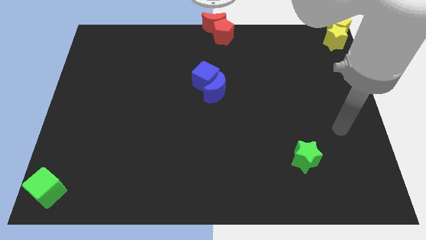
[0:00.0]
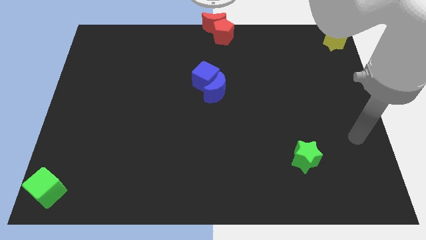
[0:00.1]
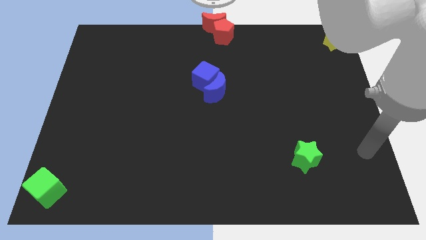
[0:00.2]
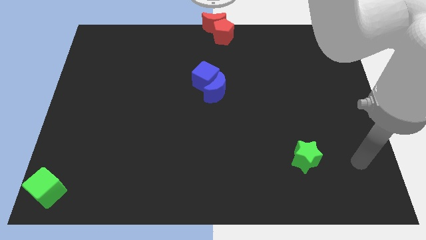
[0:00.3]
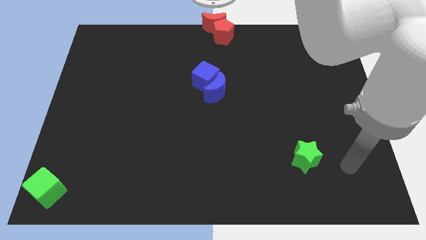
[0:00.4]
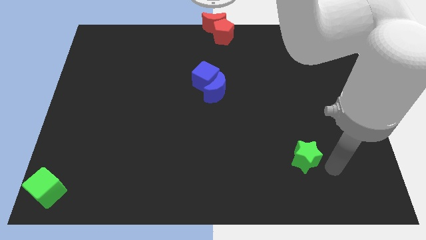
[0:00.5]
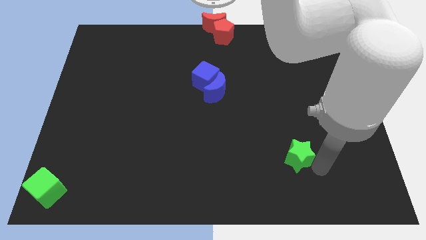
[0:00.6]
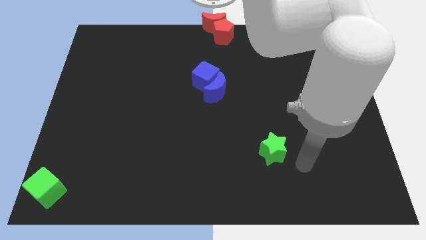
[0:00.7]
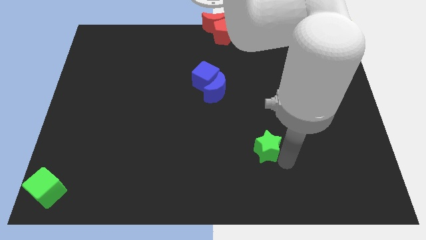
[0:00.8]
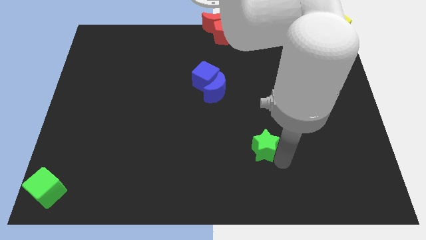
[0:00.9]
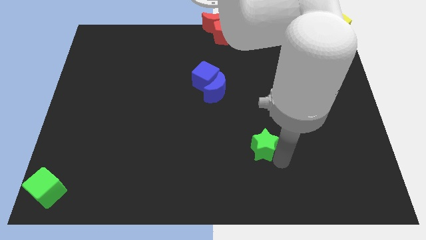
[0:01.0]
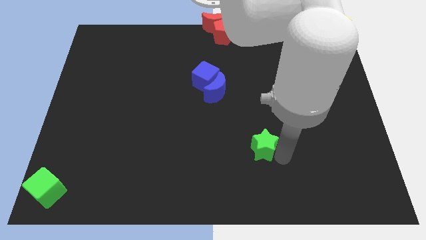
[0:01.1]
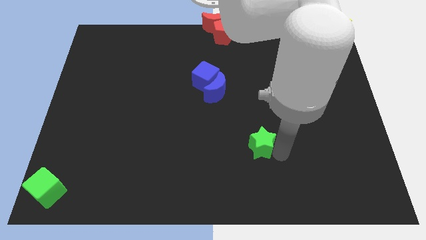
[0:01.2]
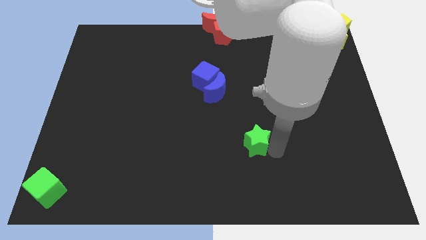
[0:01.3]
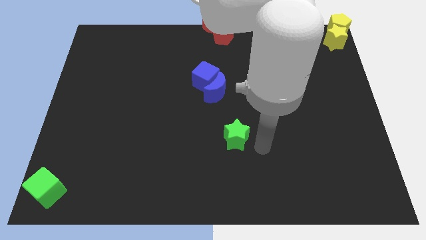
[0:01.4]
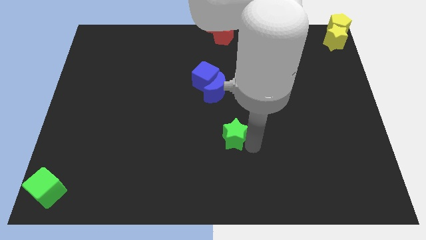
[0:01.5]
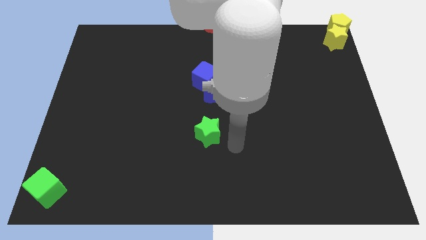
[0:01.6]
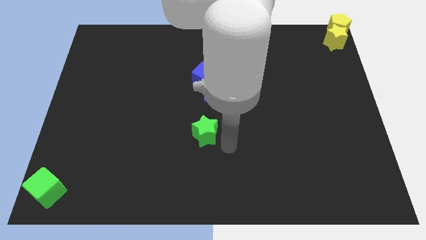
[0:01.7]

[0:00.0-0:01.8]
push the green star towards the blue crescent

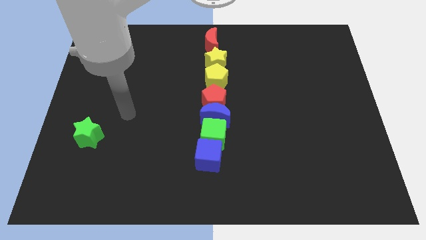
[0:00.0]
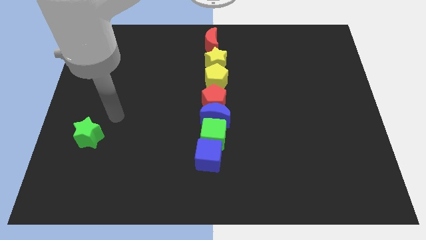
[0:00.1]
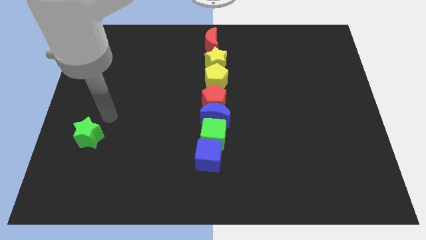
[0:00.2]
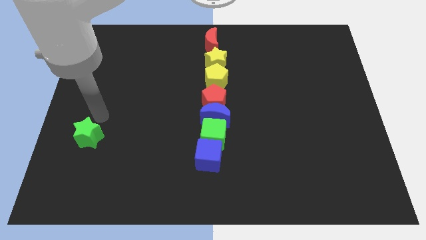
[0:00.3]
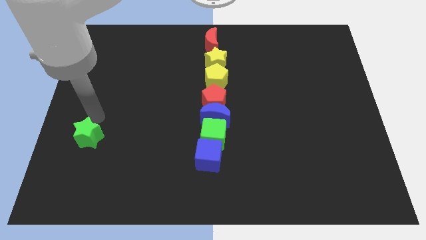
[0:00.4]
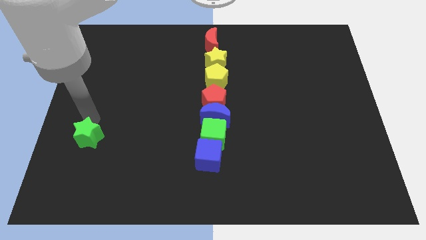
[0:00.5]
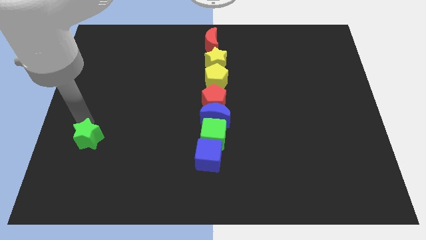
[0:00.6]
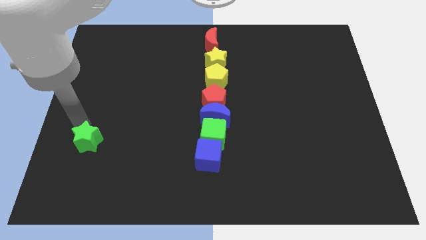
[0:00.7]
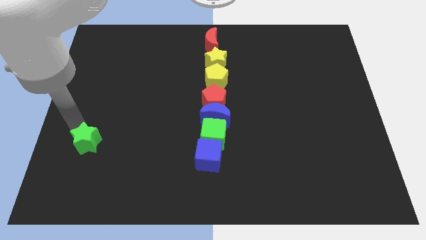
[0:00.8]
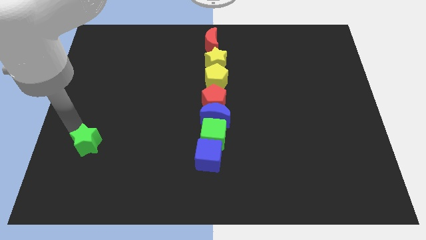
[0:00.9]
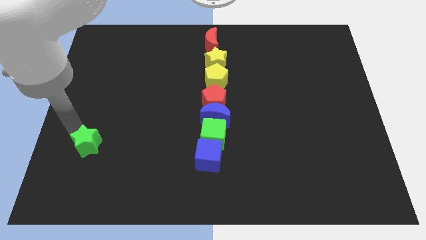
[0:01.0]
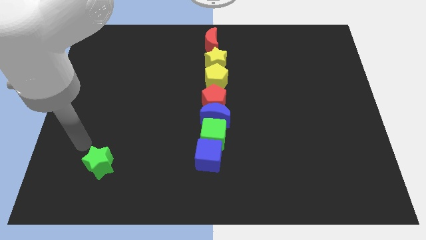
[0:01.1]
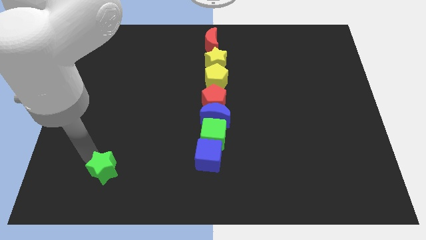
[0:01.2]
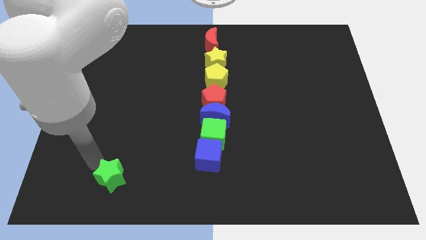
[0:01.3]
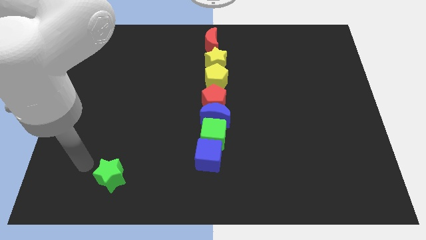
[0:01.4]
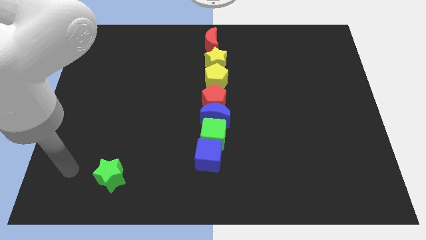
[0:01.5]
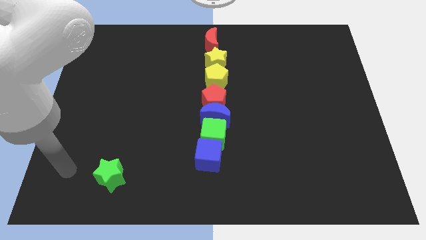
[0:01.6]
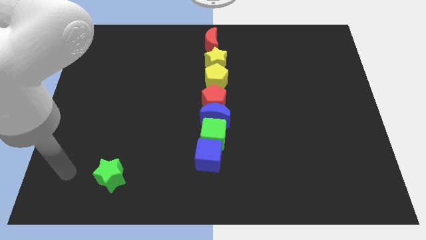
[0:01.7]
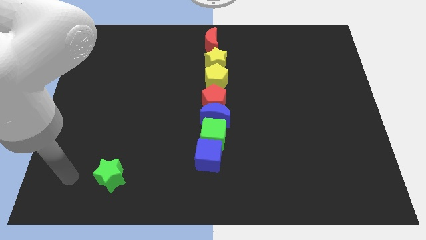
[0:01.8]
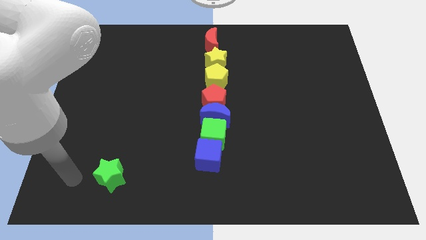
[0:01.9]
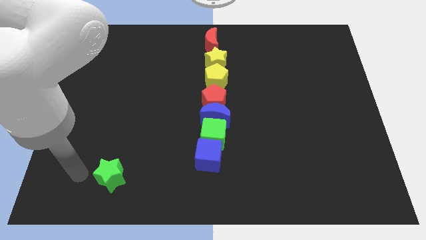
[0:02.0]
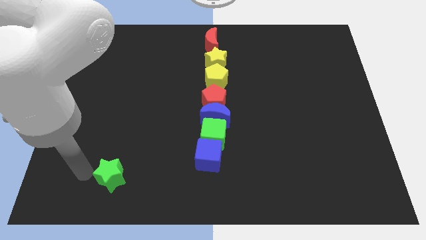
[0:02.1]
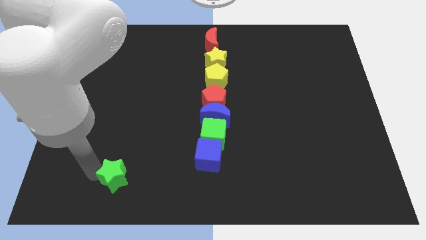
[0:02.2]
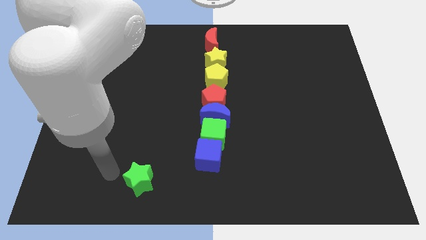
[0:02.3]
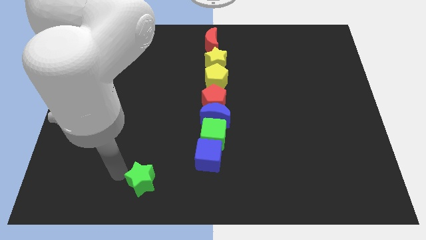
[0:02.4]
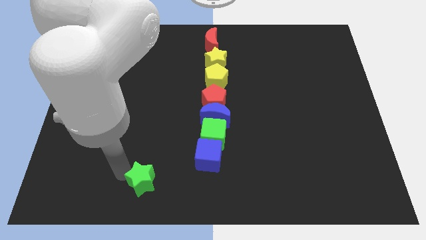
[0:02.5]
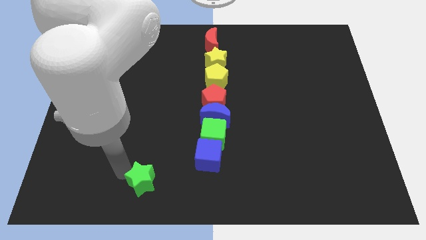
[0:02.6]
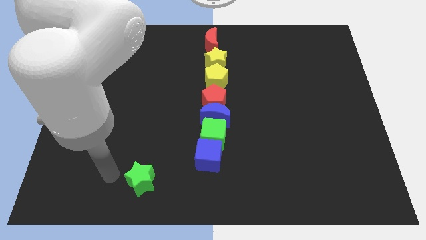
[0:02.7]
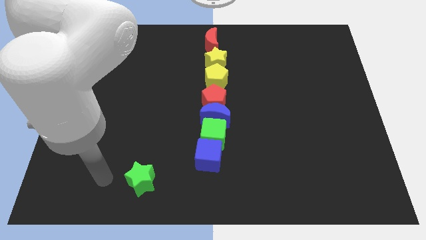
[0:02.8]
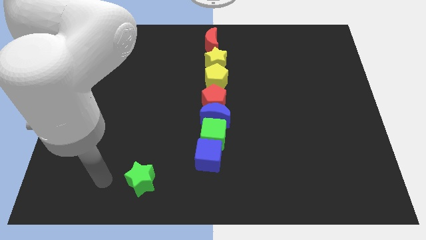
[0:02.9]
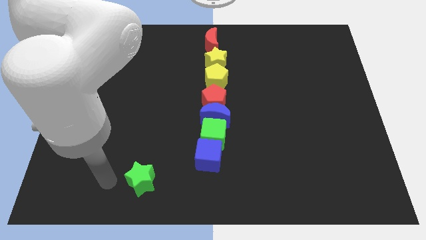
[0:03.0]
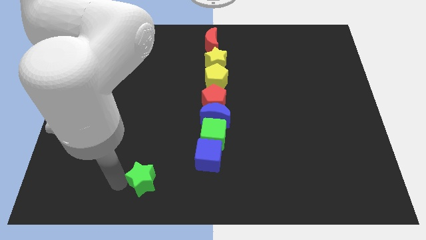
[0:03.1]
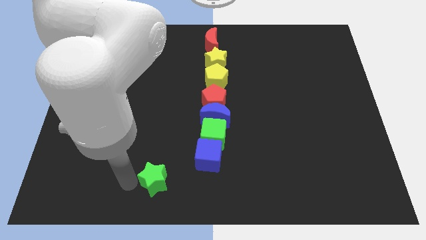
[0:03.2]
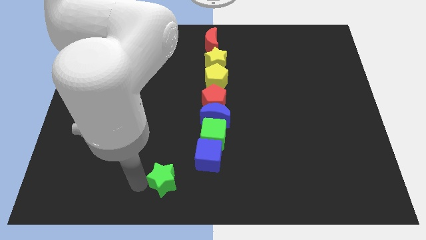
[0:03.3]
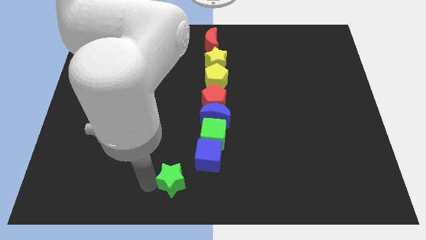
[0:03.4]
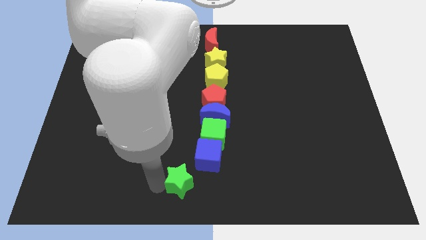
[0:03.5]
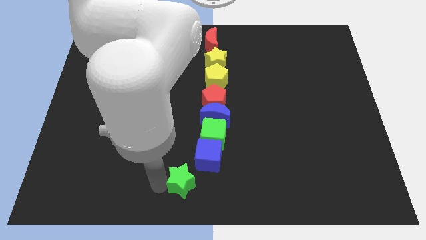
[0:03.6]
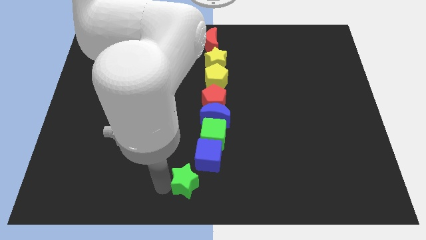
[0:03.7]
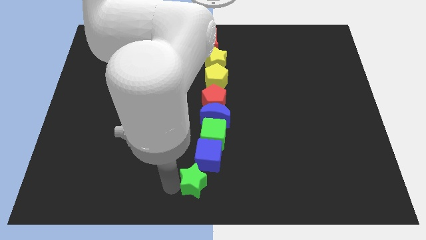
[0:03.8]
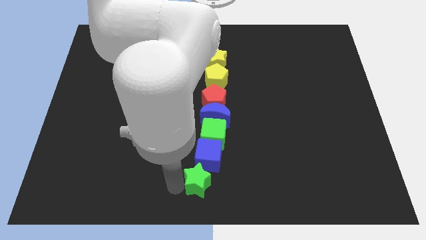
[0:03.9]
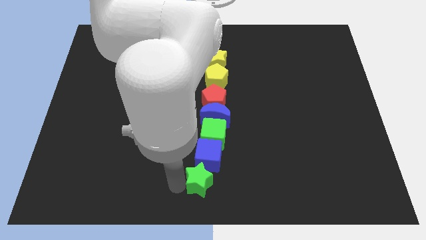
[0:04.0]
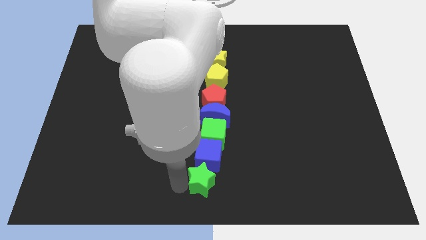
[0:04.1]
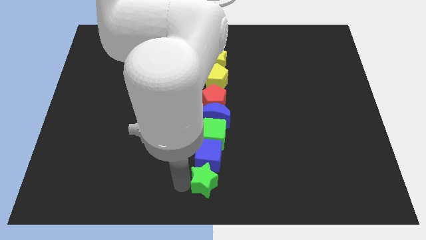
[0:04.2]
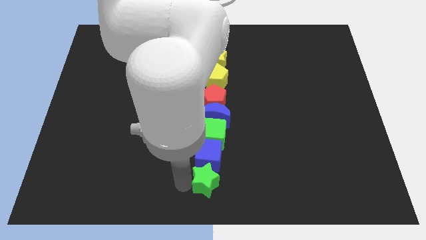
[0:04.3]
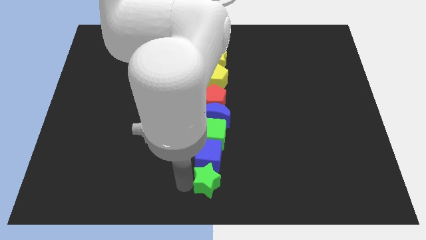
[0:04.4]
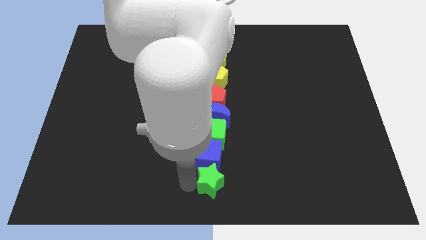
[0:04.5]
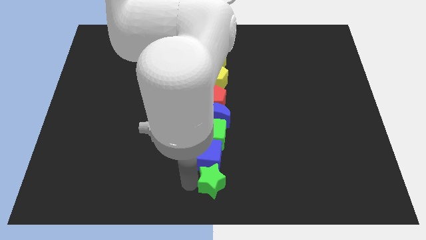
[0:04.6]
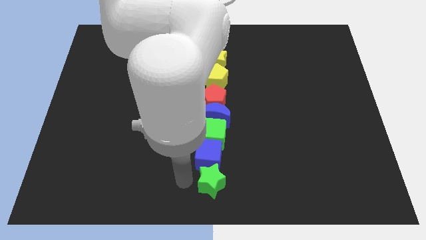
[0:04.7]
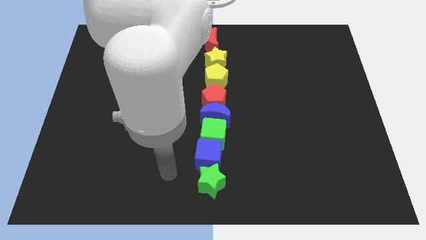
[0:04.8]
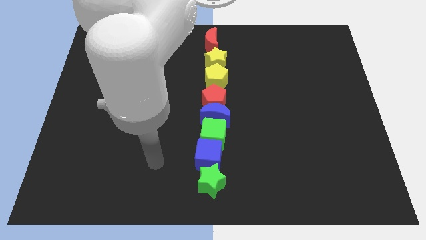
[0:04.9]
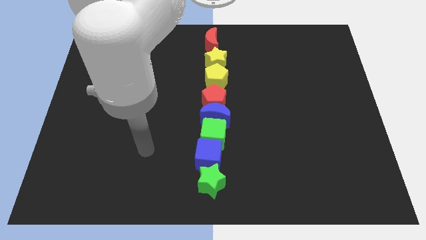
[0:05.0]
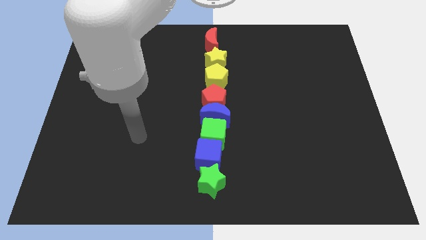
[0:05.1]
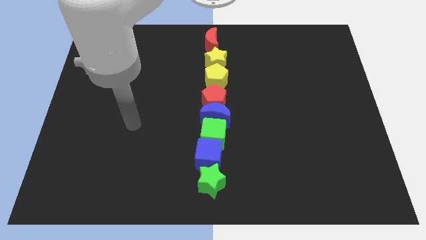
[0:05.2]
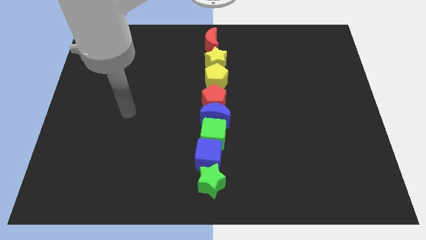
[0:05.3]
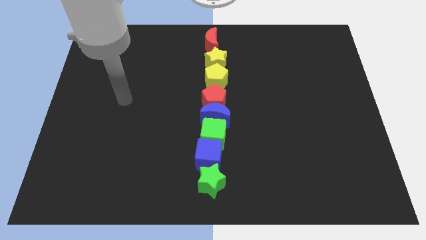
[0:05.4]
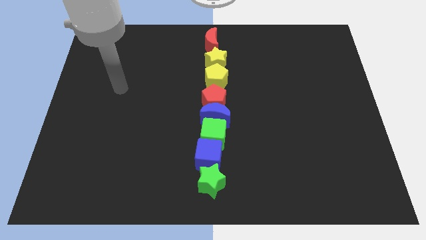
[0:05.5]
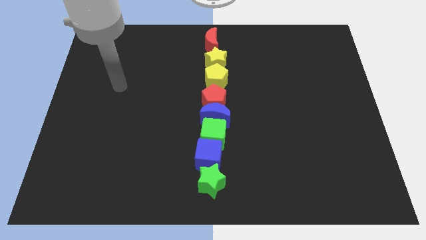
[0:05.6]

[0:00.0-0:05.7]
push the green star to the bottom side of the blue block

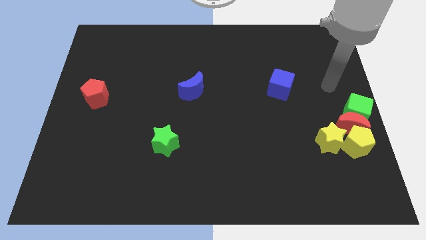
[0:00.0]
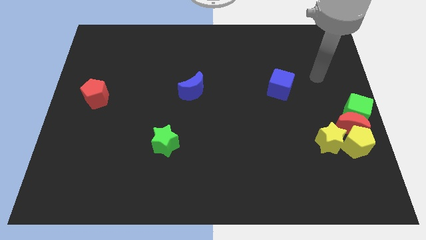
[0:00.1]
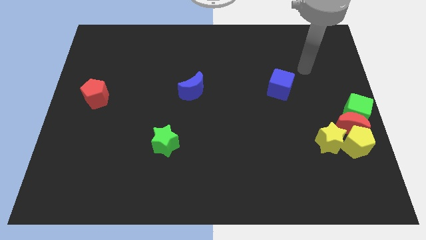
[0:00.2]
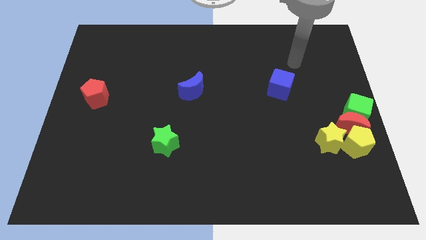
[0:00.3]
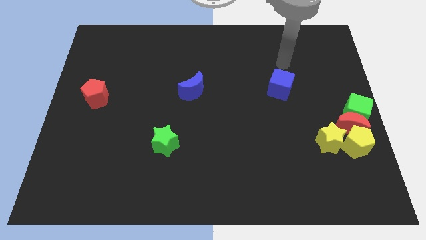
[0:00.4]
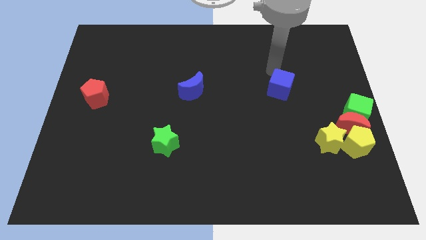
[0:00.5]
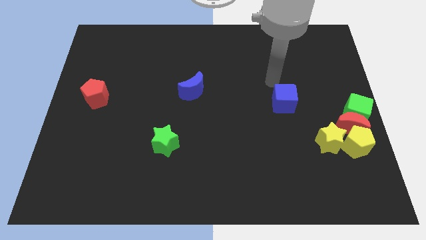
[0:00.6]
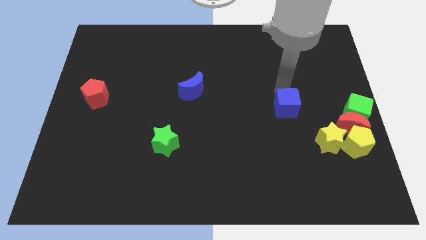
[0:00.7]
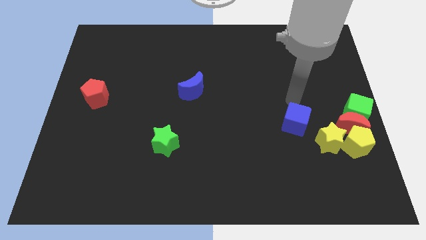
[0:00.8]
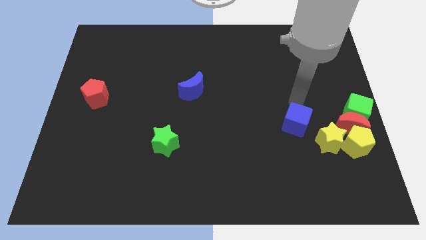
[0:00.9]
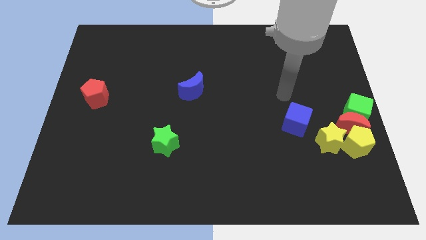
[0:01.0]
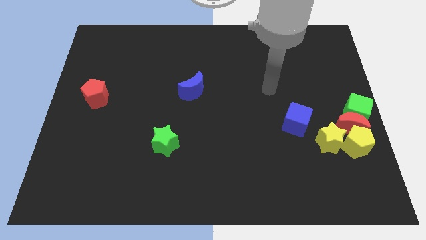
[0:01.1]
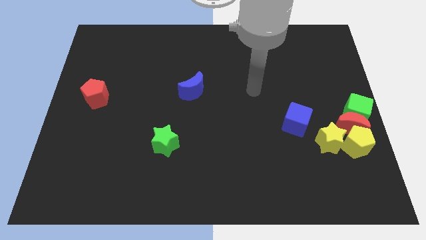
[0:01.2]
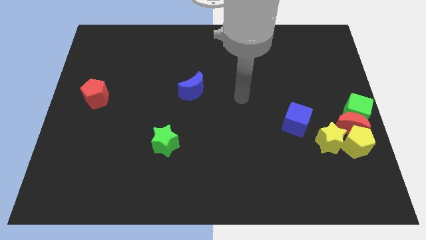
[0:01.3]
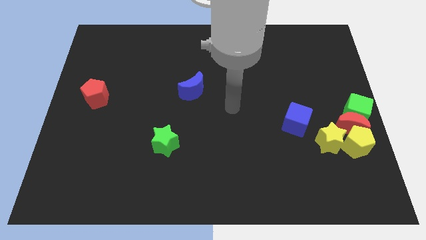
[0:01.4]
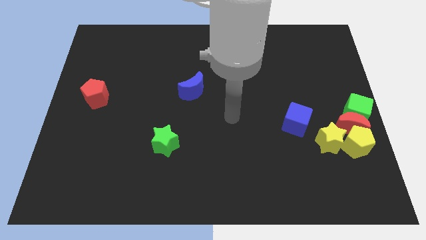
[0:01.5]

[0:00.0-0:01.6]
move the blue cube diagonally top left to yellow star
